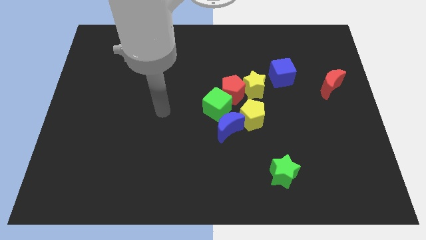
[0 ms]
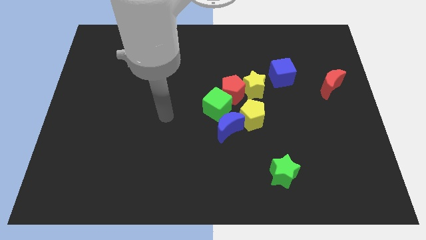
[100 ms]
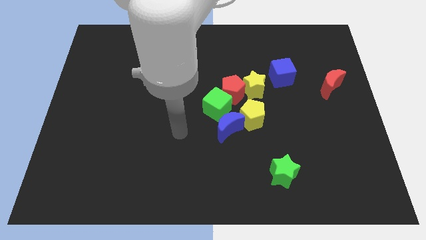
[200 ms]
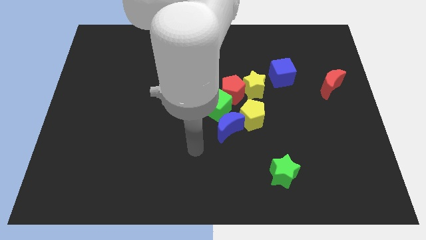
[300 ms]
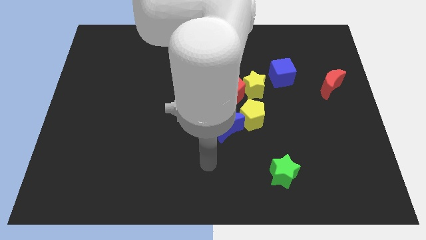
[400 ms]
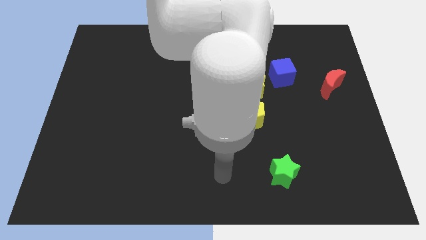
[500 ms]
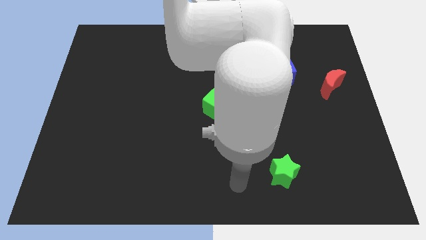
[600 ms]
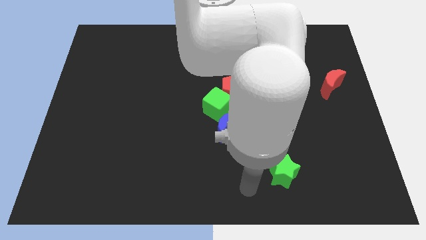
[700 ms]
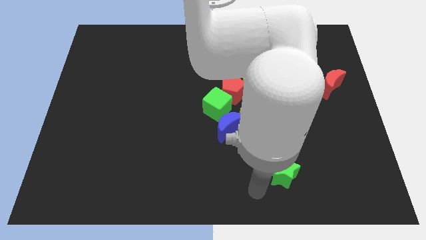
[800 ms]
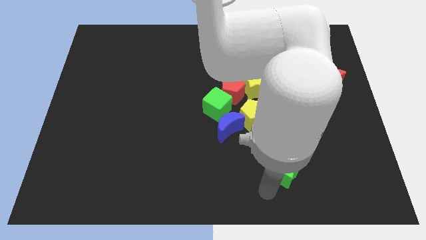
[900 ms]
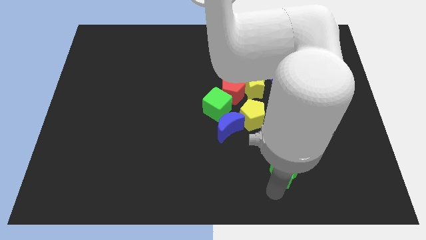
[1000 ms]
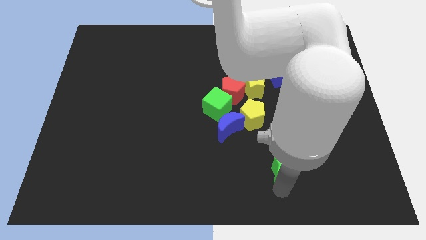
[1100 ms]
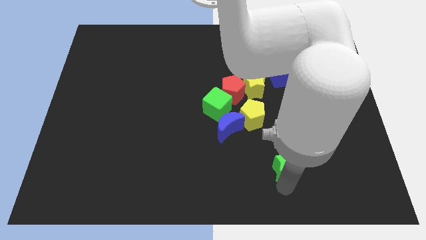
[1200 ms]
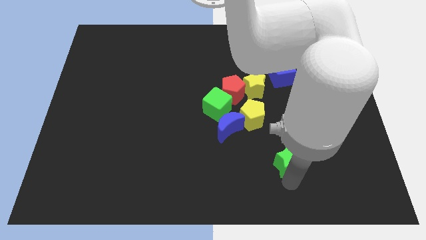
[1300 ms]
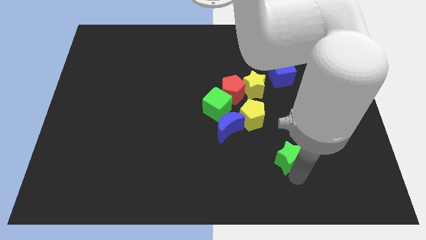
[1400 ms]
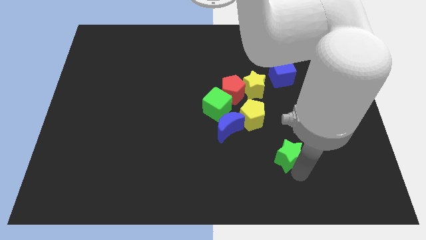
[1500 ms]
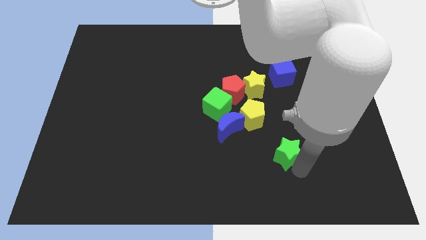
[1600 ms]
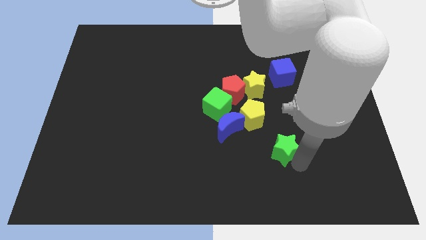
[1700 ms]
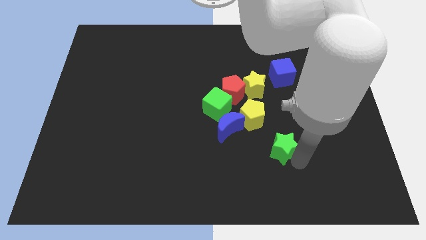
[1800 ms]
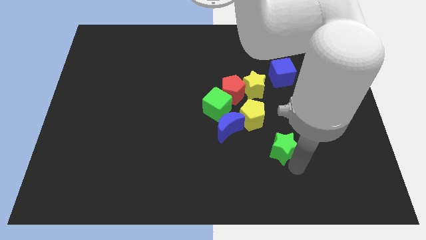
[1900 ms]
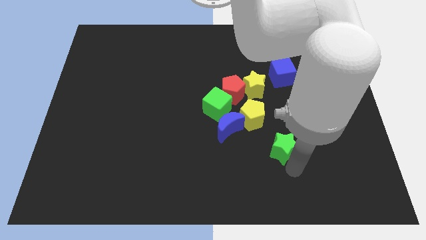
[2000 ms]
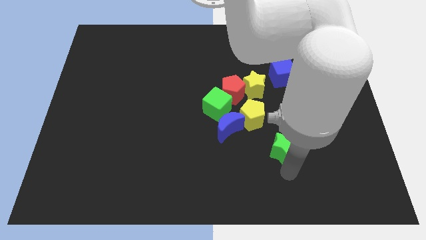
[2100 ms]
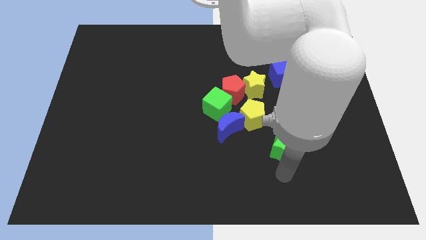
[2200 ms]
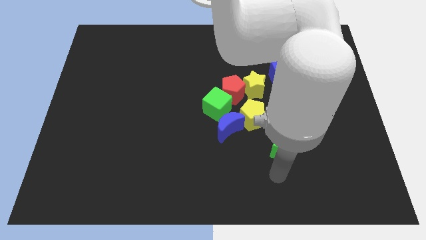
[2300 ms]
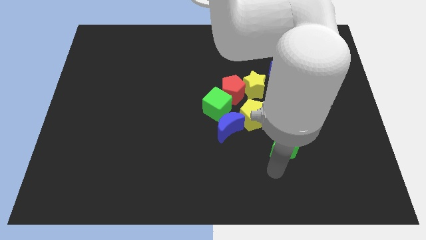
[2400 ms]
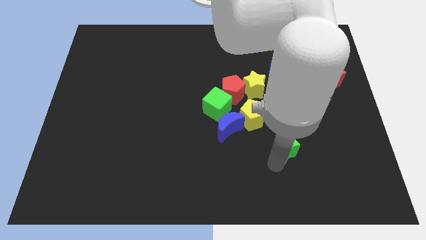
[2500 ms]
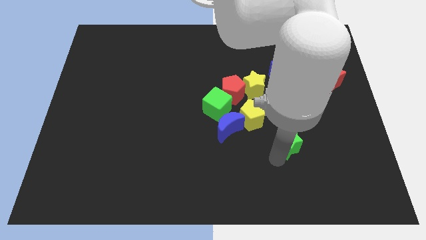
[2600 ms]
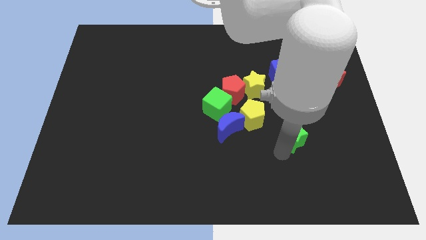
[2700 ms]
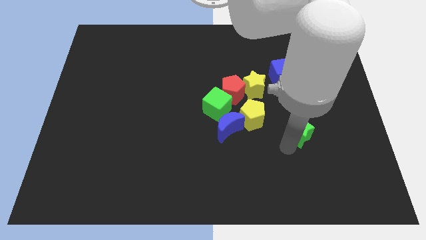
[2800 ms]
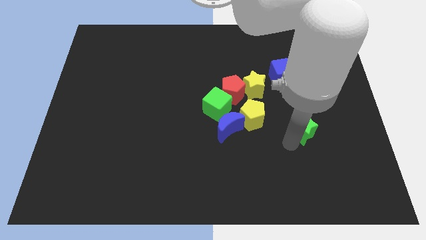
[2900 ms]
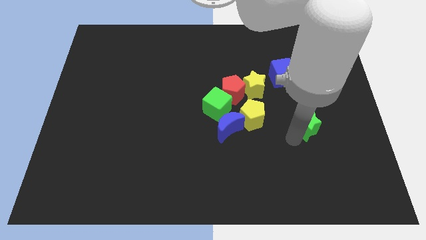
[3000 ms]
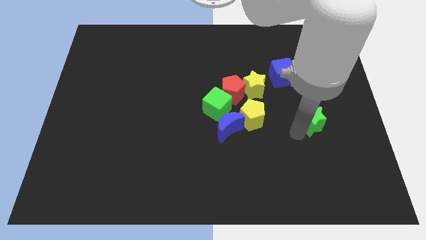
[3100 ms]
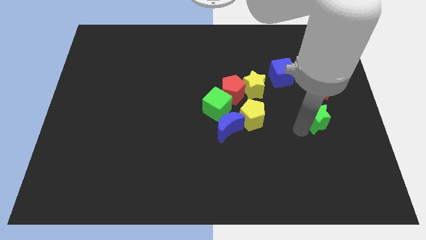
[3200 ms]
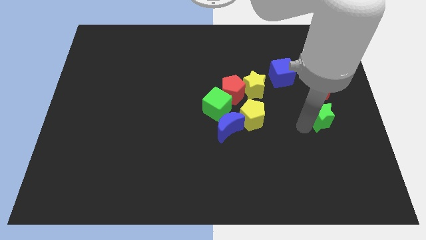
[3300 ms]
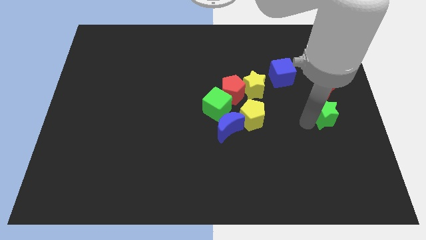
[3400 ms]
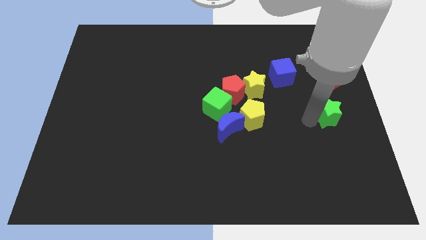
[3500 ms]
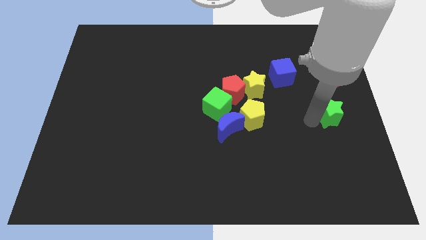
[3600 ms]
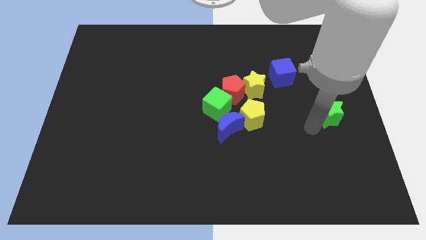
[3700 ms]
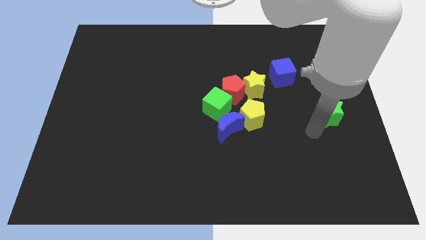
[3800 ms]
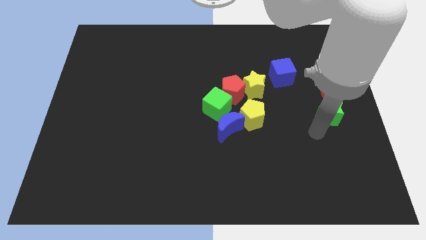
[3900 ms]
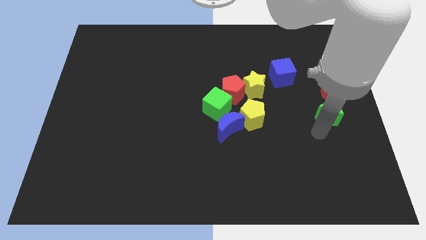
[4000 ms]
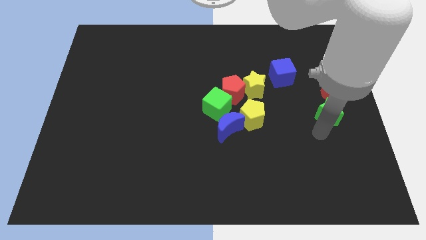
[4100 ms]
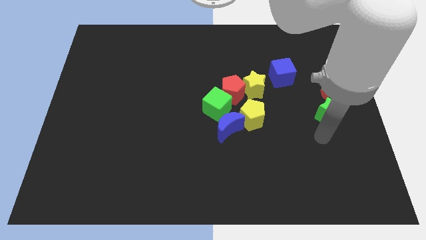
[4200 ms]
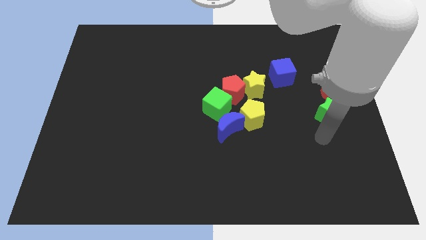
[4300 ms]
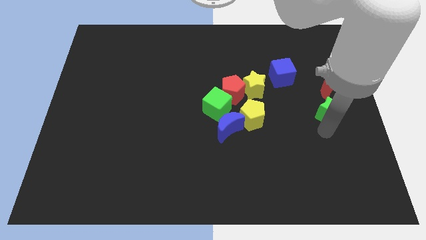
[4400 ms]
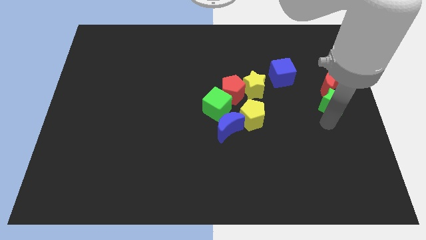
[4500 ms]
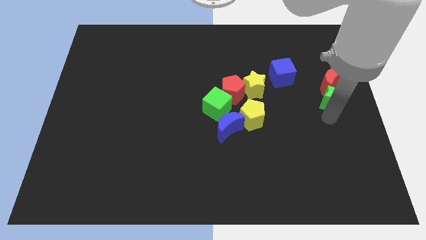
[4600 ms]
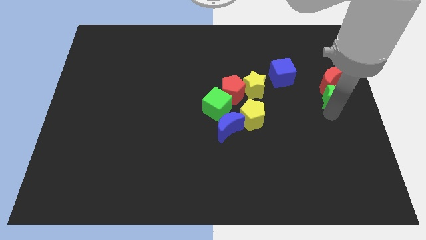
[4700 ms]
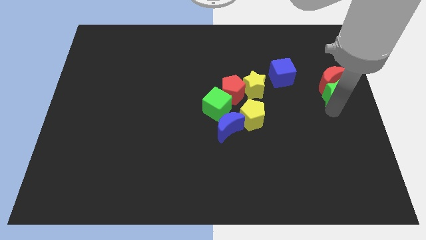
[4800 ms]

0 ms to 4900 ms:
push the green star close to the red moon

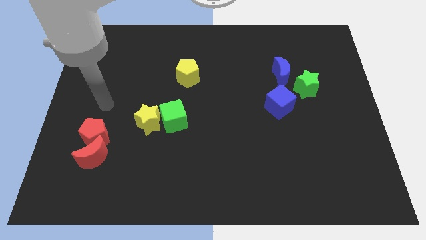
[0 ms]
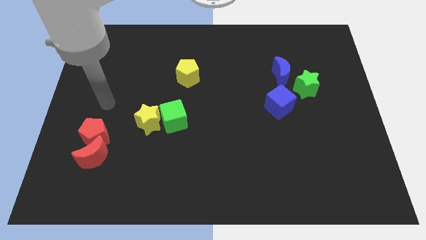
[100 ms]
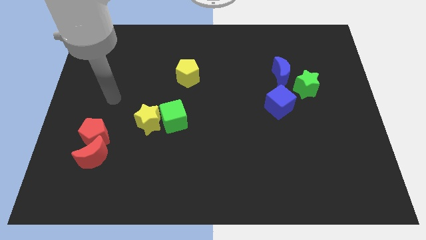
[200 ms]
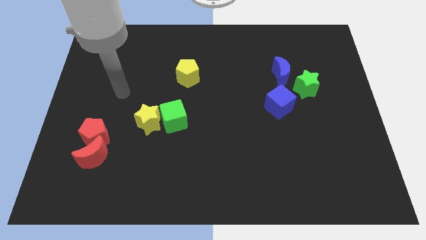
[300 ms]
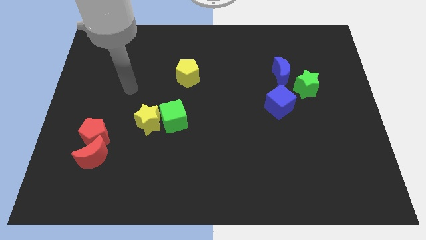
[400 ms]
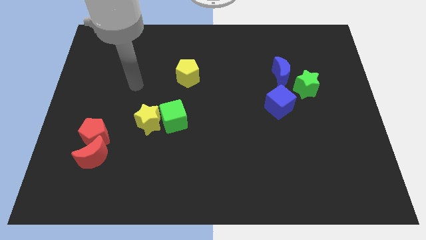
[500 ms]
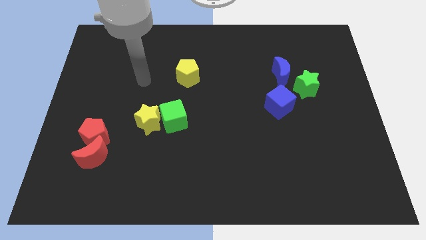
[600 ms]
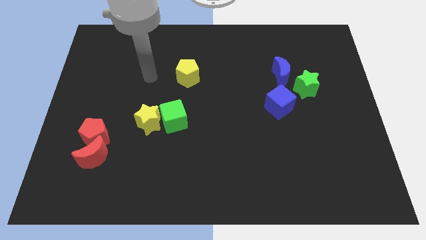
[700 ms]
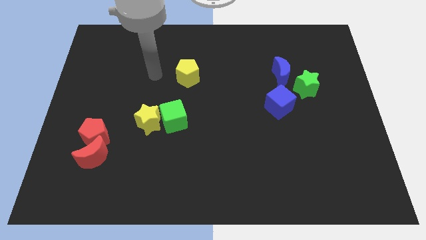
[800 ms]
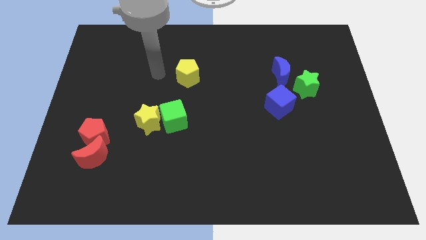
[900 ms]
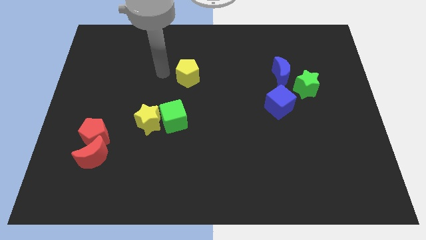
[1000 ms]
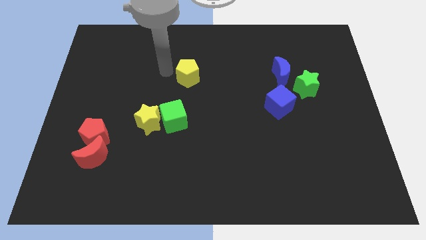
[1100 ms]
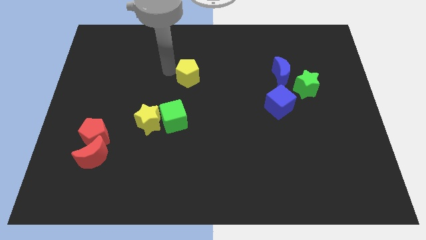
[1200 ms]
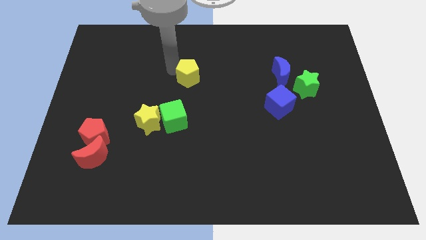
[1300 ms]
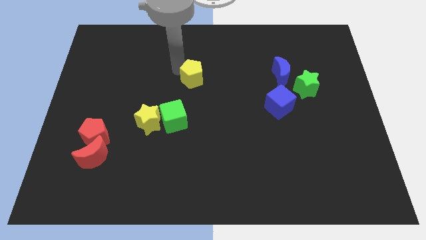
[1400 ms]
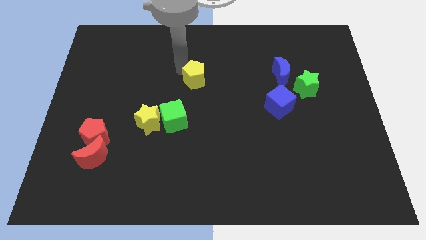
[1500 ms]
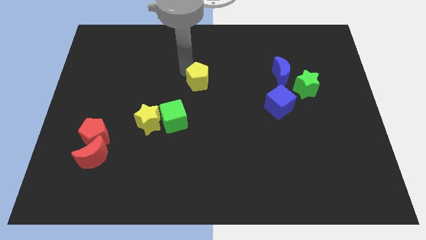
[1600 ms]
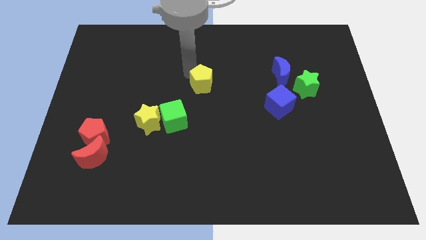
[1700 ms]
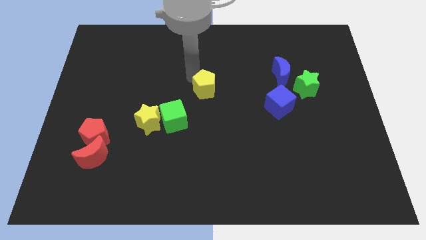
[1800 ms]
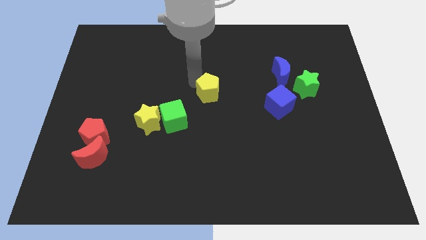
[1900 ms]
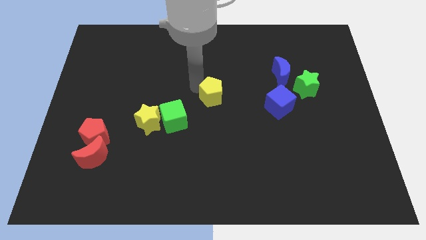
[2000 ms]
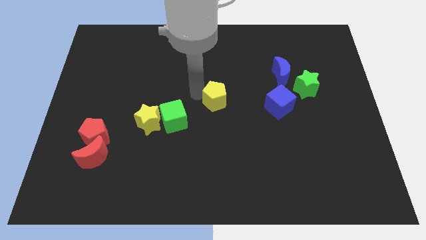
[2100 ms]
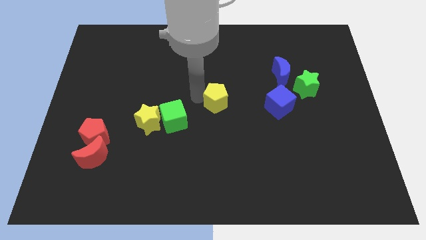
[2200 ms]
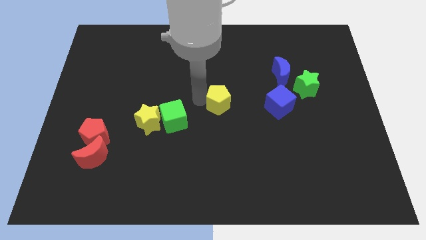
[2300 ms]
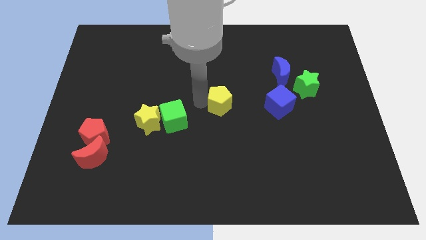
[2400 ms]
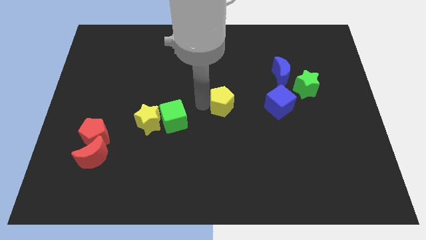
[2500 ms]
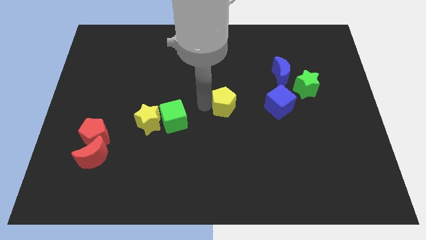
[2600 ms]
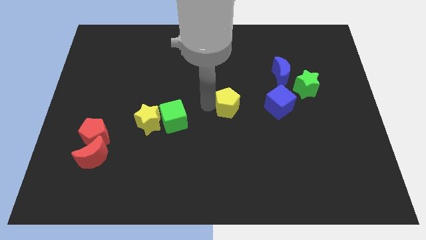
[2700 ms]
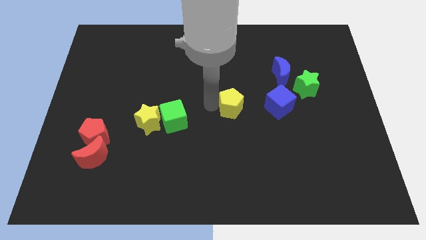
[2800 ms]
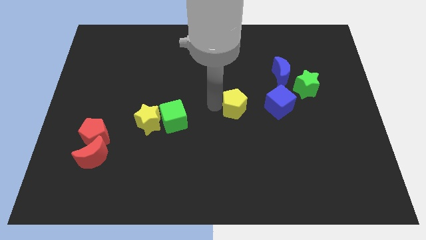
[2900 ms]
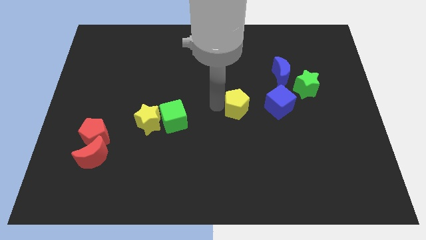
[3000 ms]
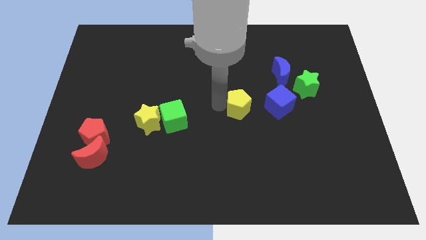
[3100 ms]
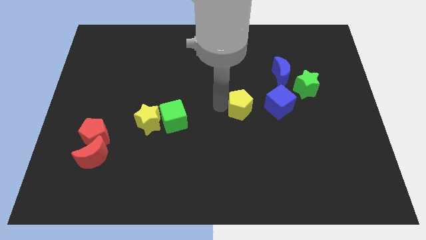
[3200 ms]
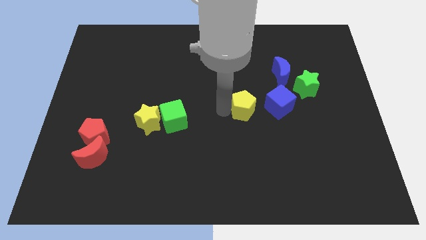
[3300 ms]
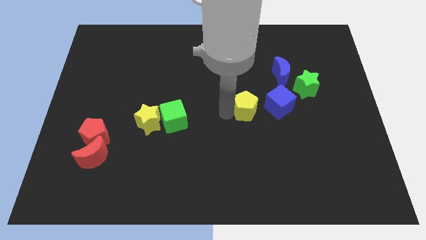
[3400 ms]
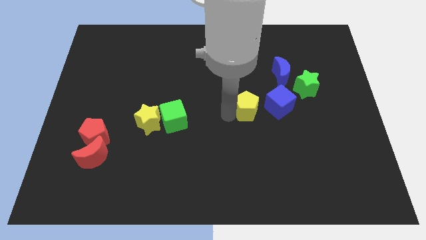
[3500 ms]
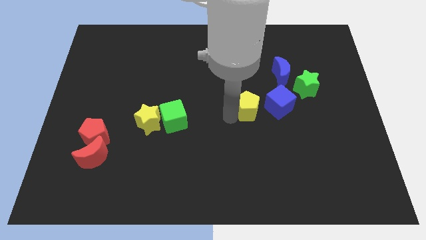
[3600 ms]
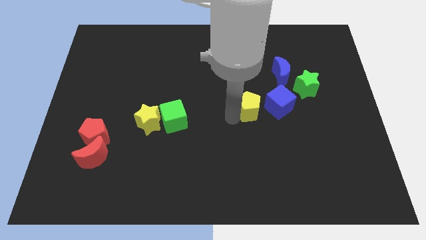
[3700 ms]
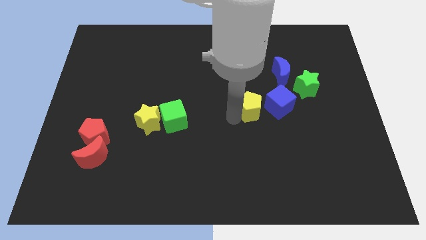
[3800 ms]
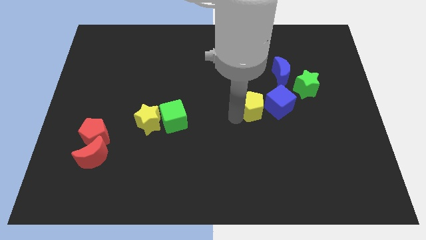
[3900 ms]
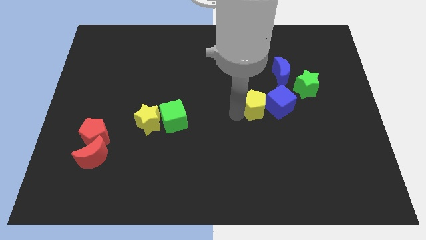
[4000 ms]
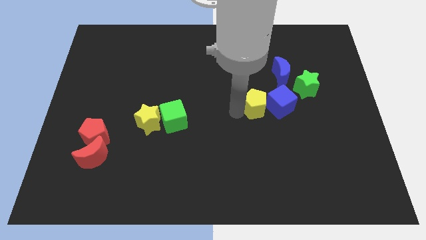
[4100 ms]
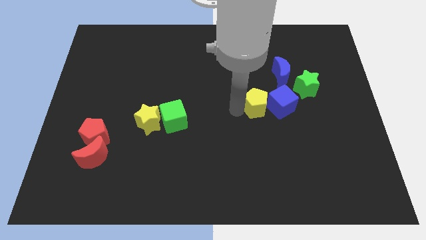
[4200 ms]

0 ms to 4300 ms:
put the yellow pentagon next to the blue cube
